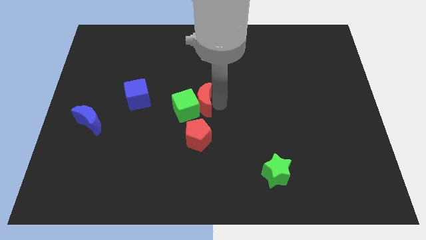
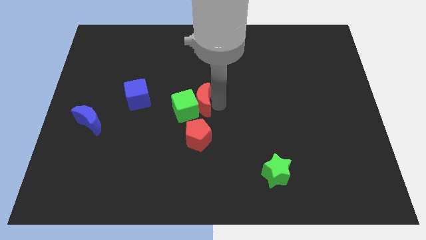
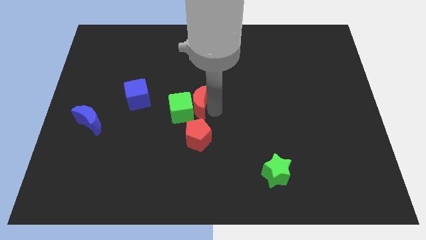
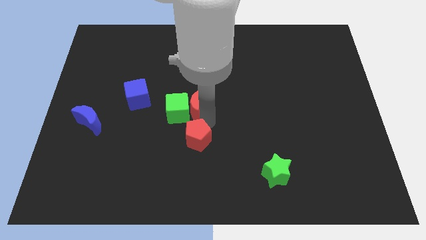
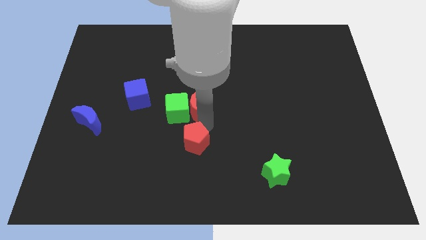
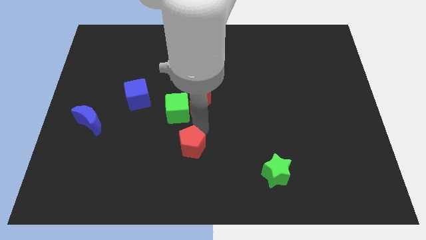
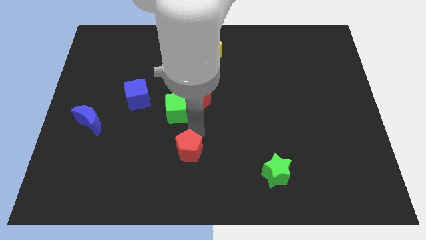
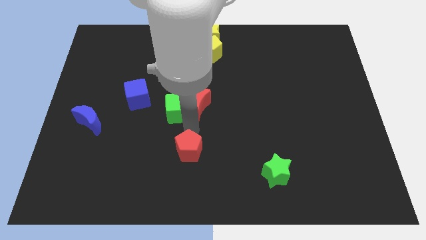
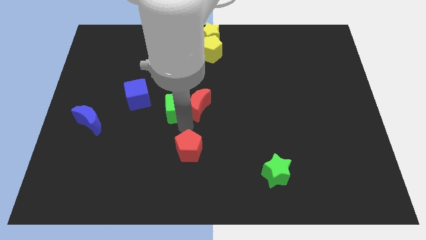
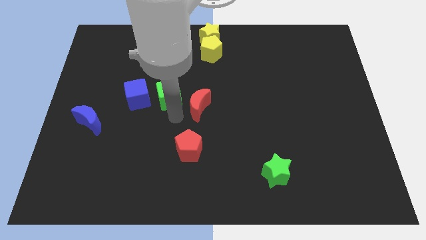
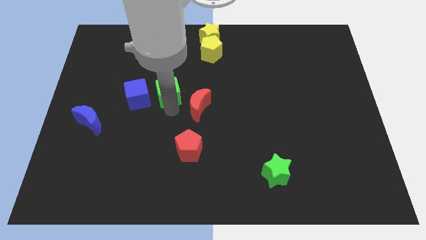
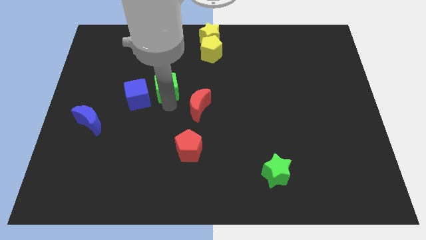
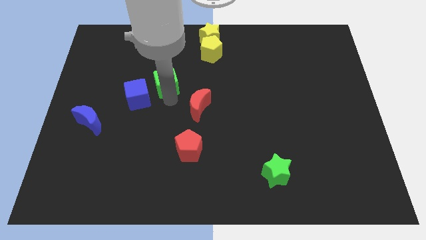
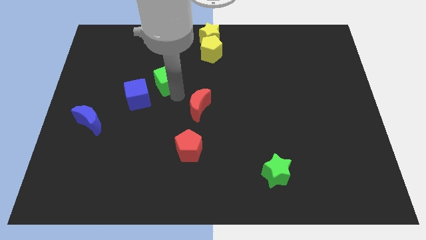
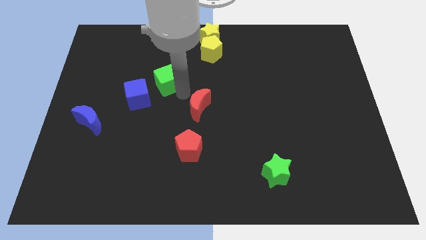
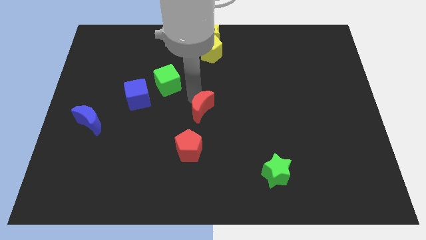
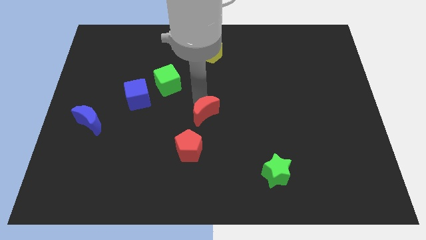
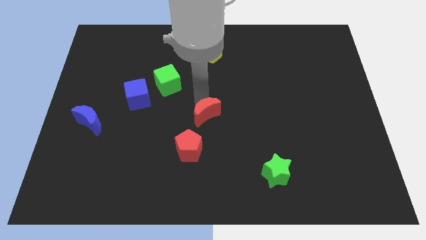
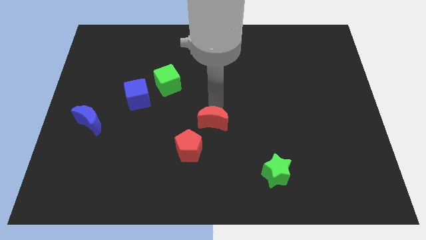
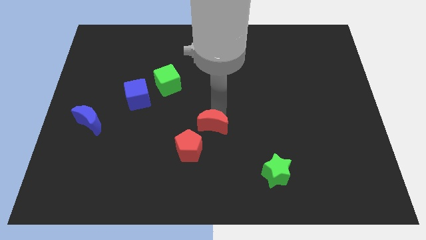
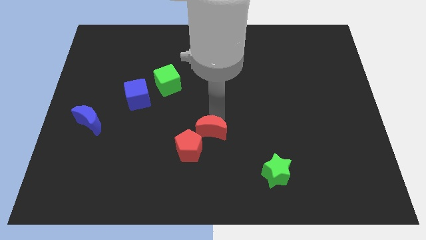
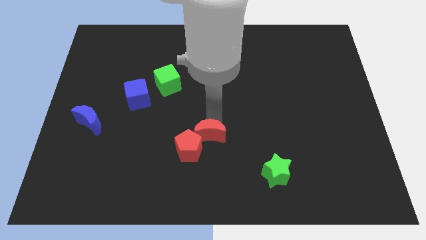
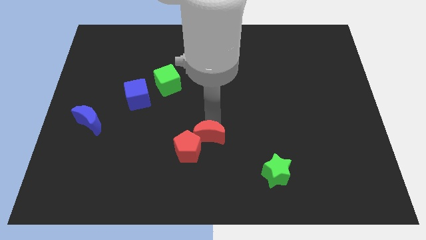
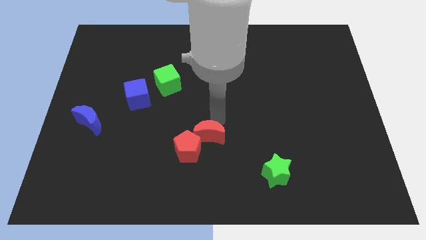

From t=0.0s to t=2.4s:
separate the green cube from the red blocks

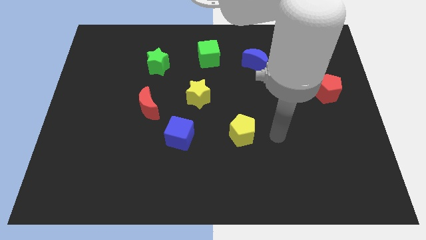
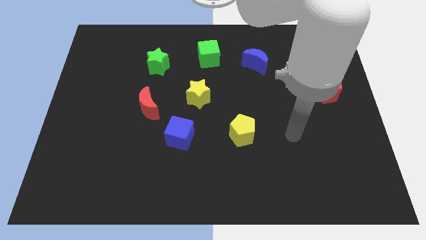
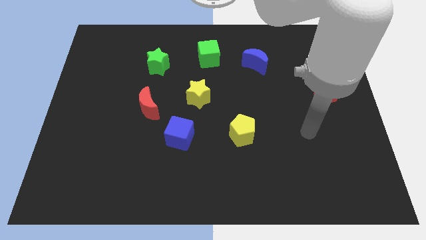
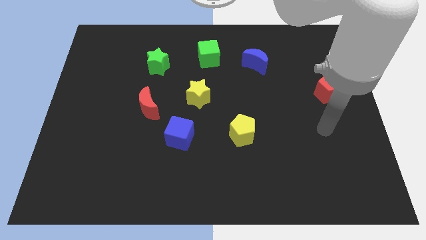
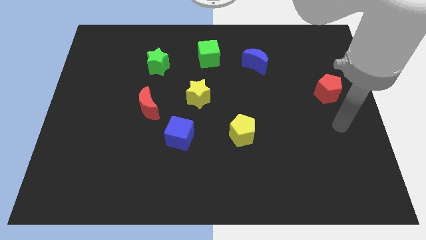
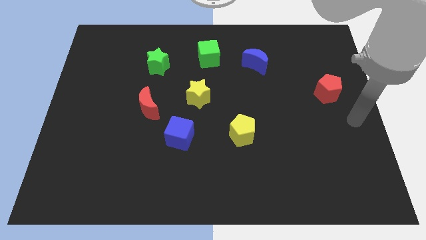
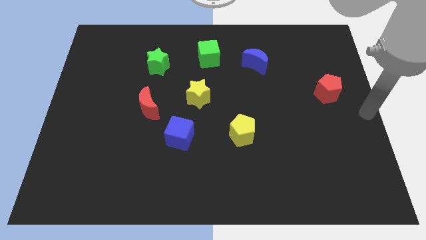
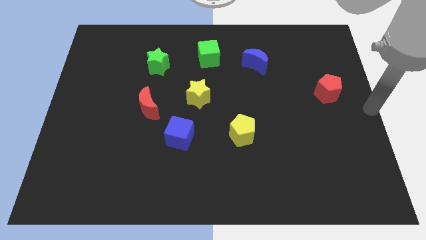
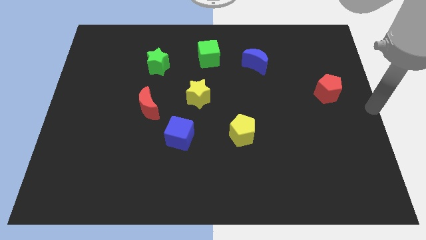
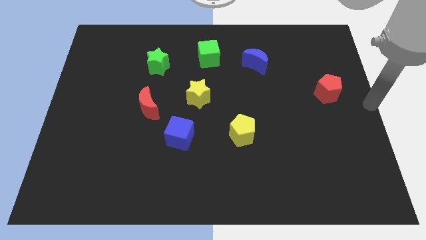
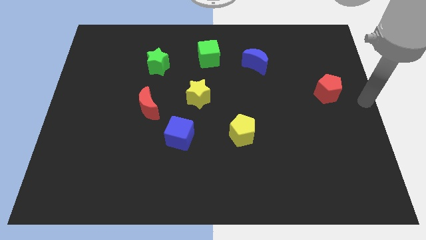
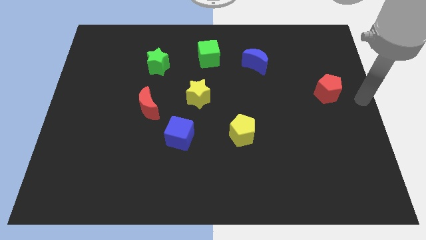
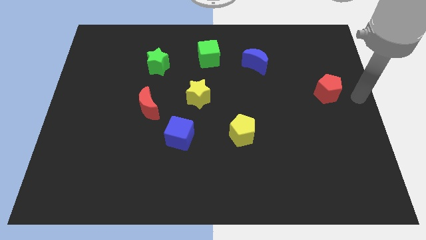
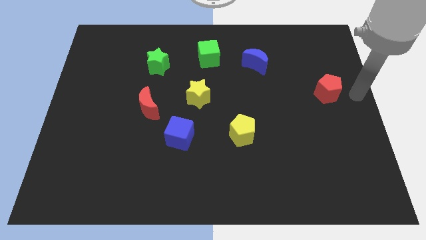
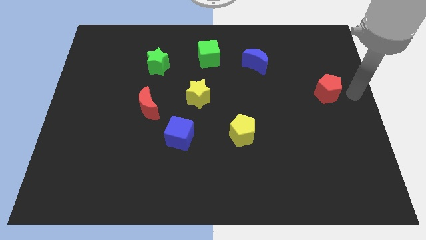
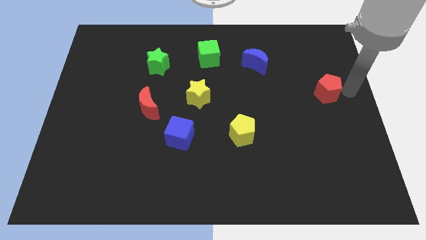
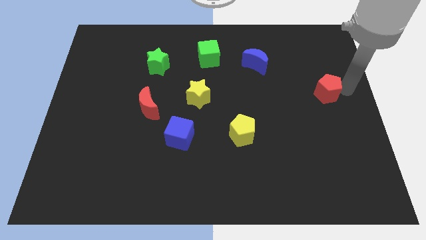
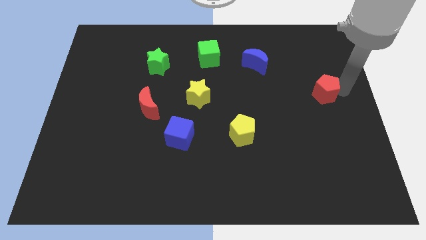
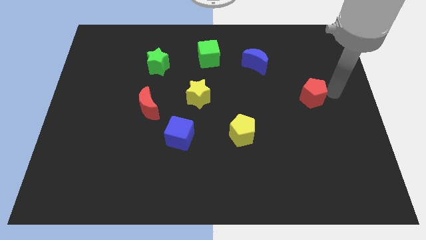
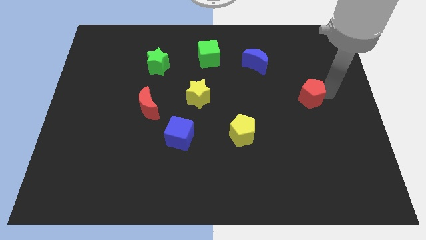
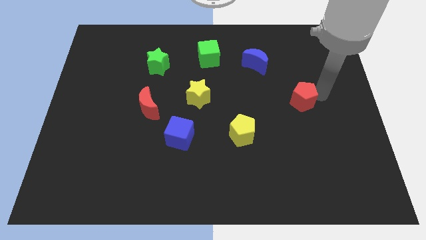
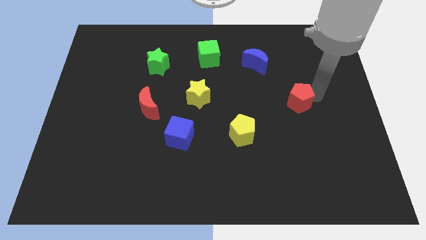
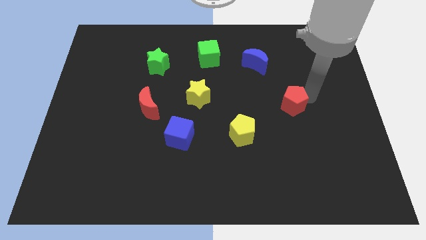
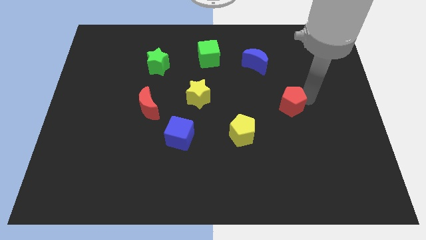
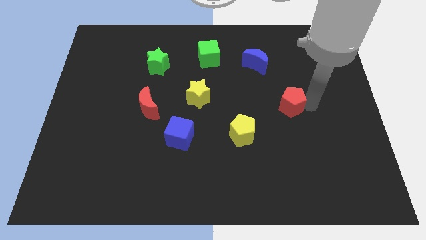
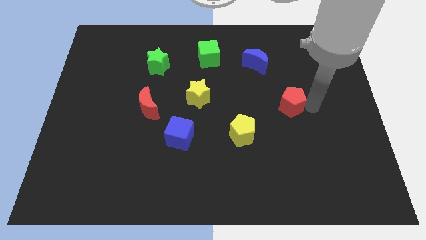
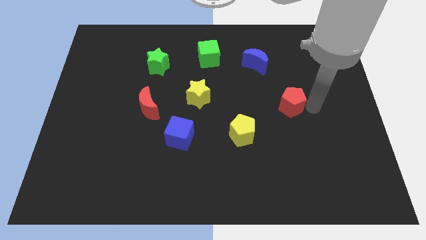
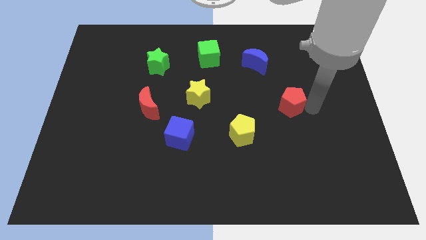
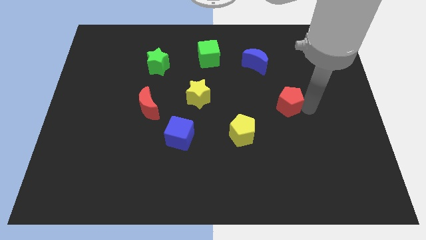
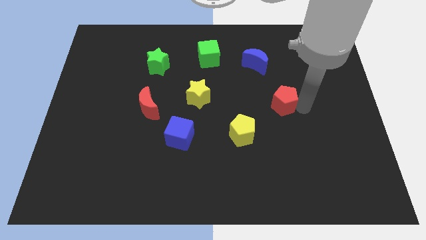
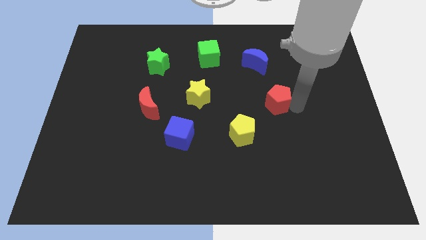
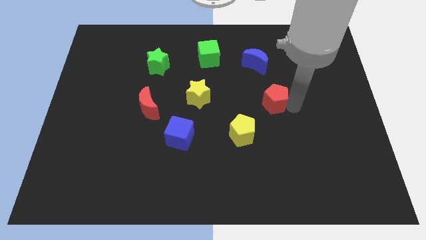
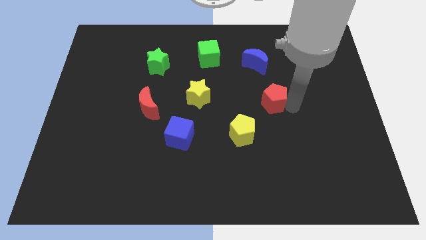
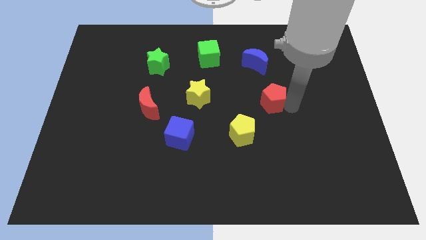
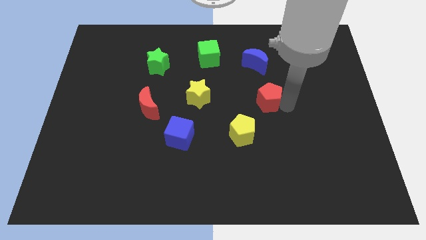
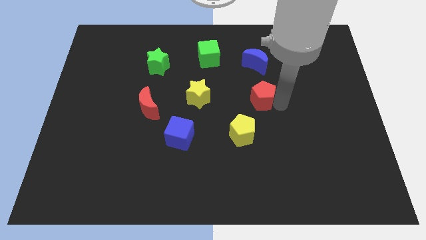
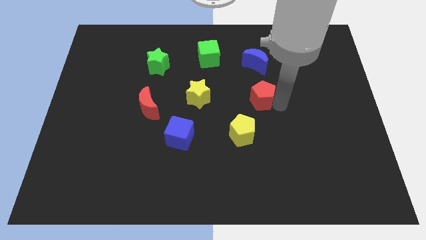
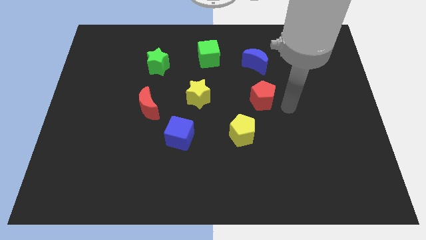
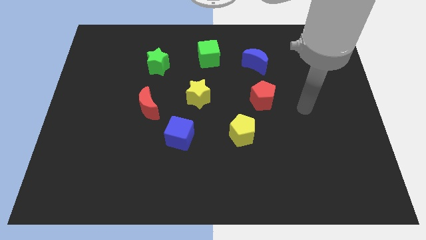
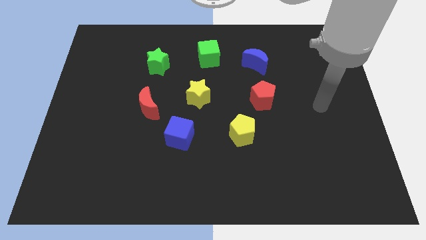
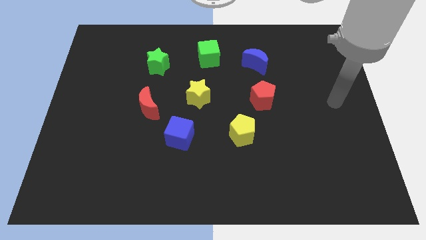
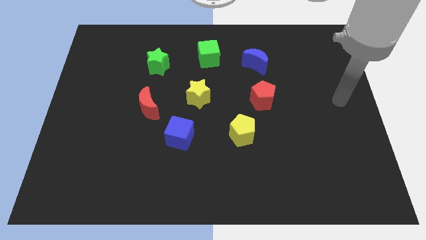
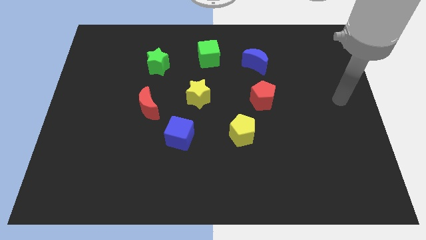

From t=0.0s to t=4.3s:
move the red pentagon to the bottom of the blue crescent

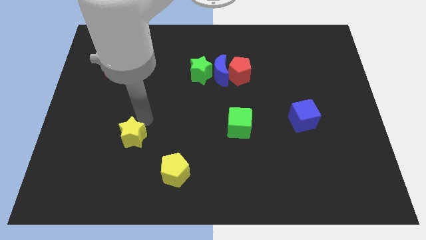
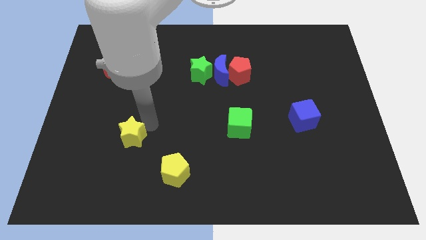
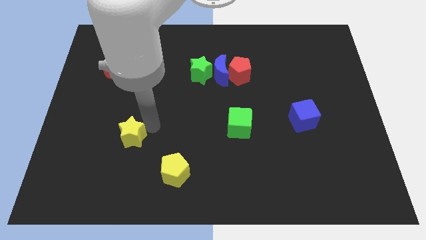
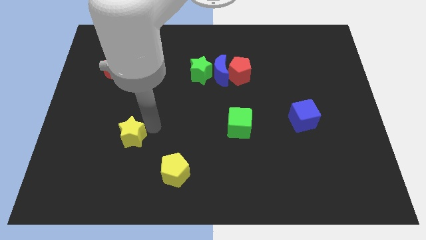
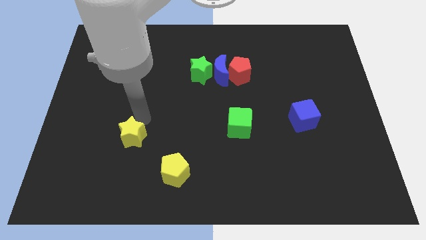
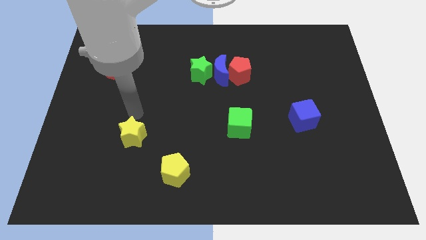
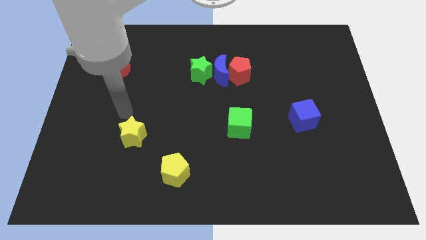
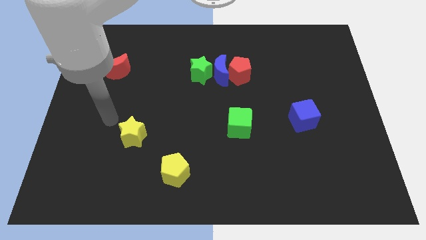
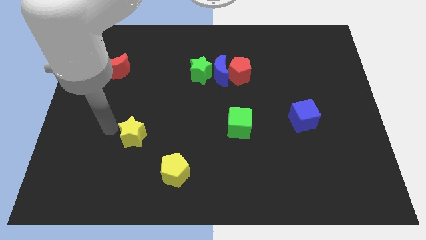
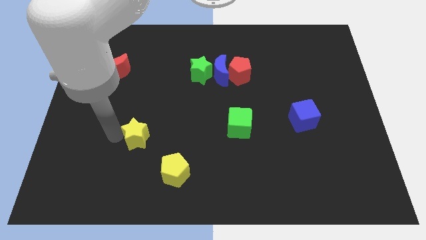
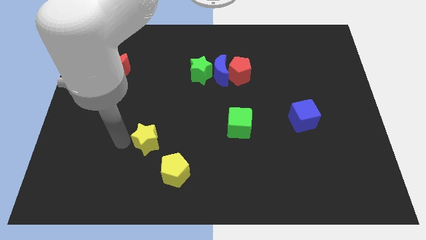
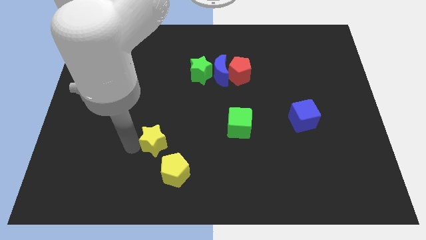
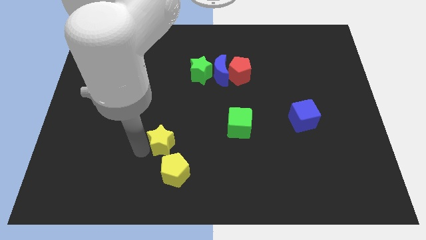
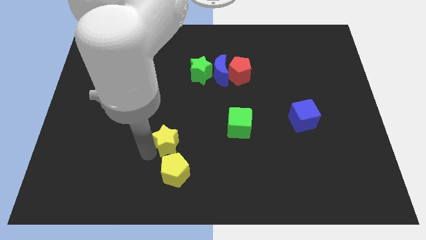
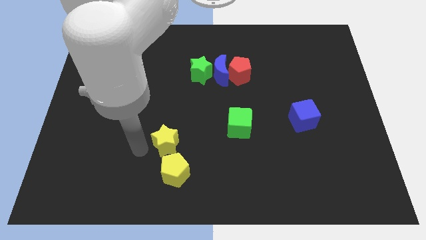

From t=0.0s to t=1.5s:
move the yellow star above the yellow pentagon

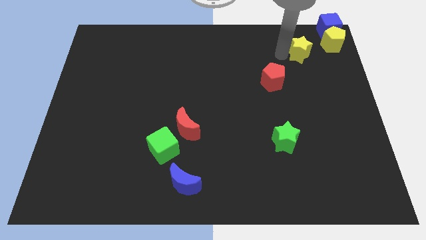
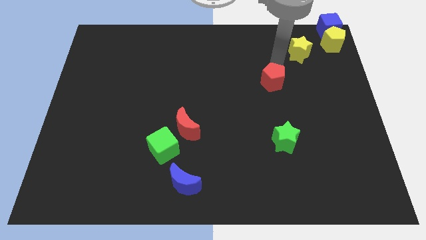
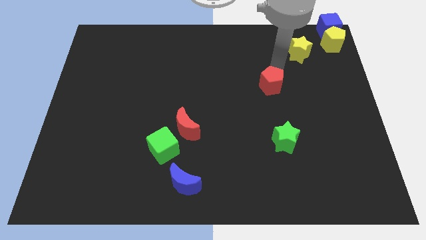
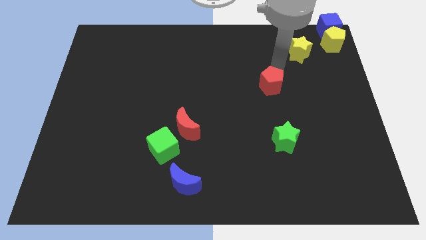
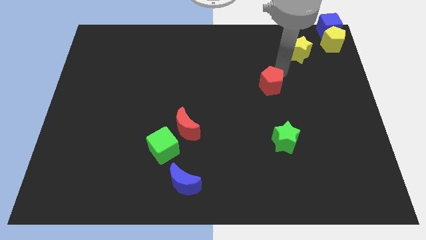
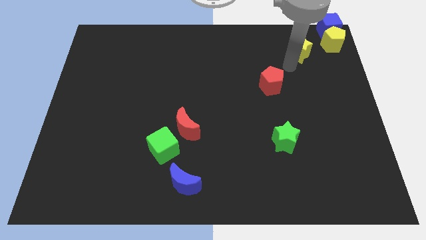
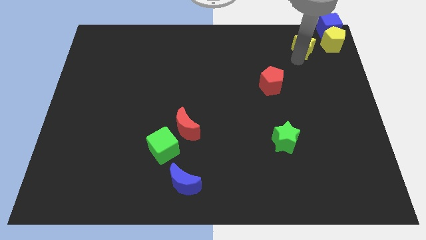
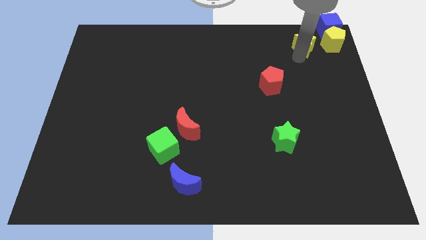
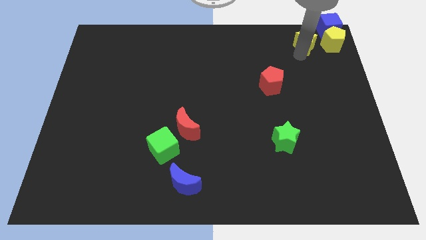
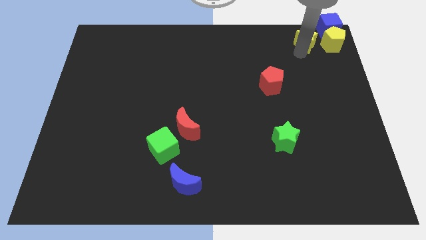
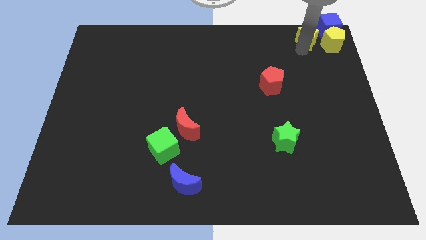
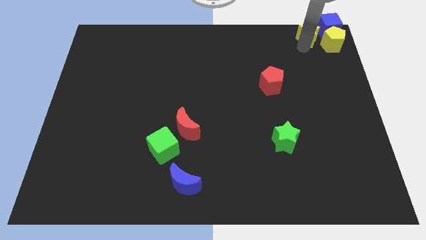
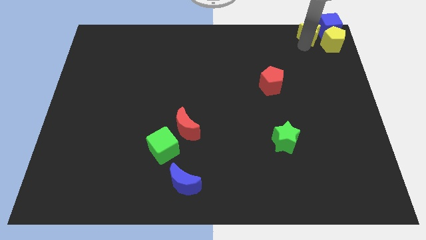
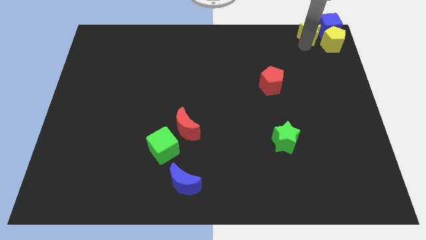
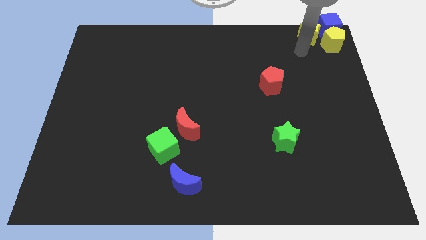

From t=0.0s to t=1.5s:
put the yellow star at the left of the blue cube
